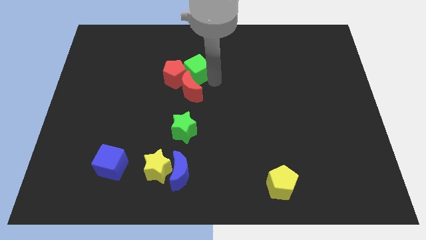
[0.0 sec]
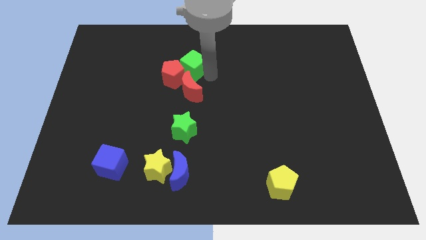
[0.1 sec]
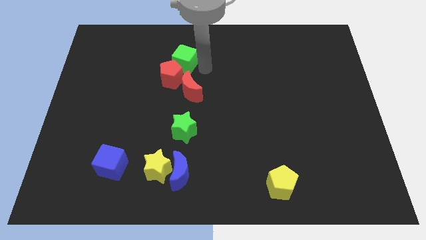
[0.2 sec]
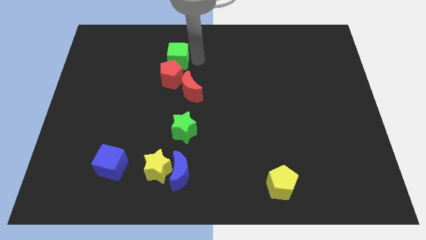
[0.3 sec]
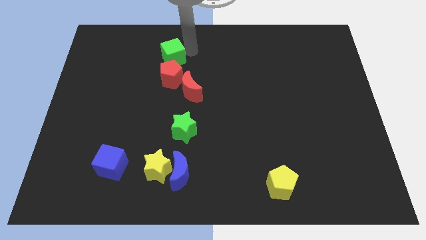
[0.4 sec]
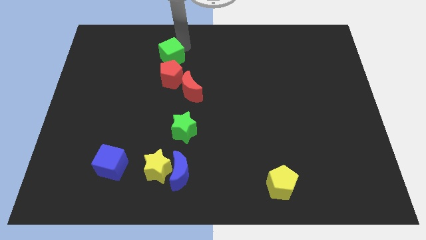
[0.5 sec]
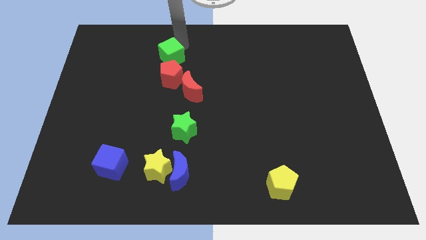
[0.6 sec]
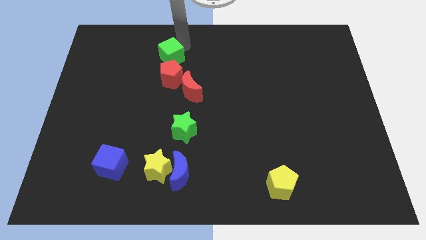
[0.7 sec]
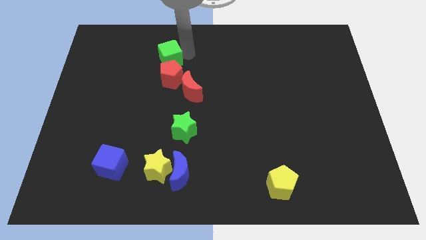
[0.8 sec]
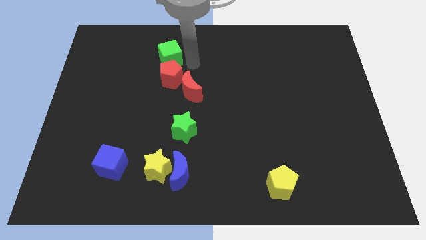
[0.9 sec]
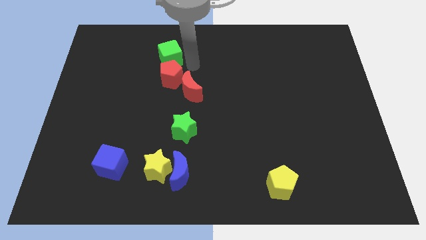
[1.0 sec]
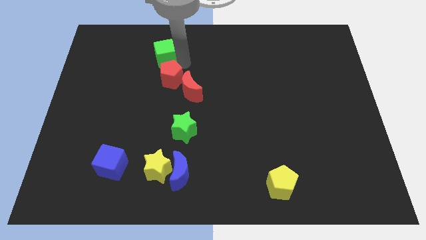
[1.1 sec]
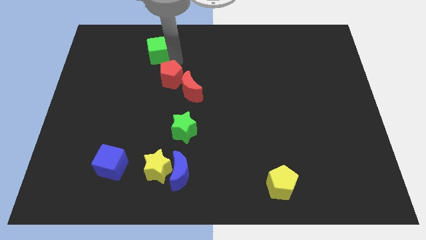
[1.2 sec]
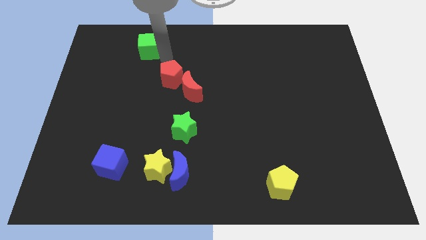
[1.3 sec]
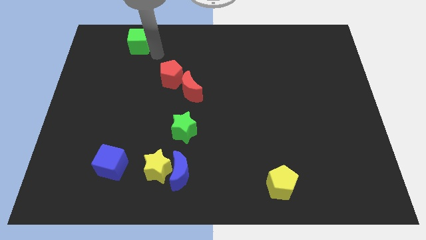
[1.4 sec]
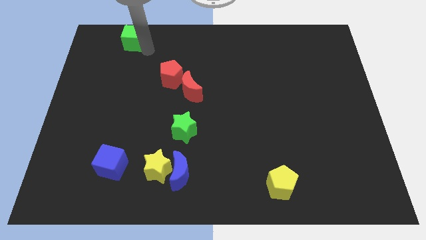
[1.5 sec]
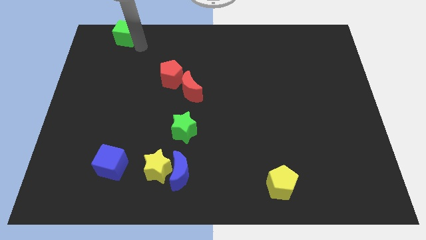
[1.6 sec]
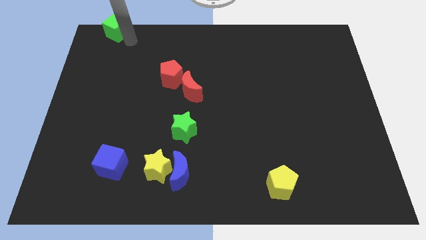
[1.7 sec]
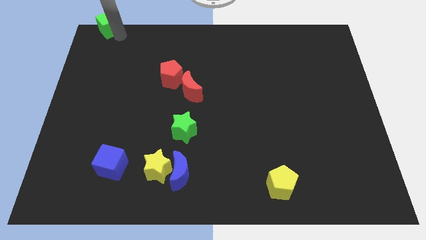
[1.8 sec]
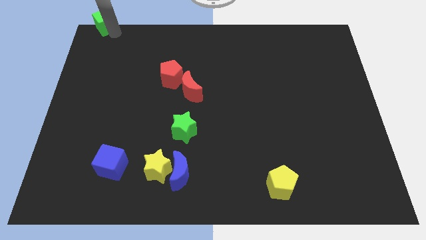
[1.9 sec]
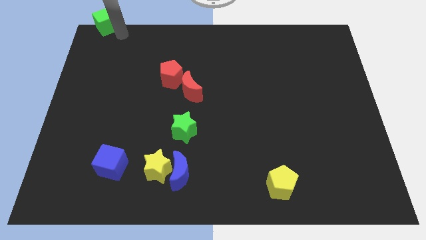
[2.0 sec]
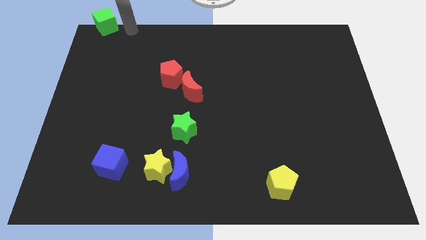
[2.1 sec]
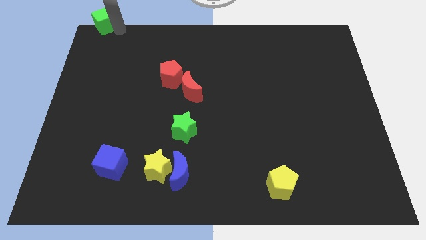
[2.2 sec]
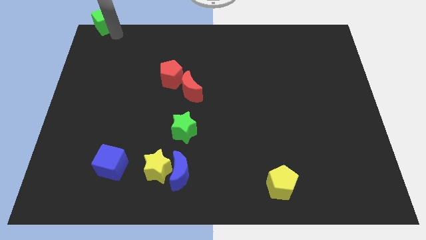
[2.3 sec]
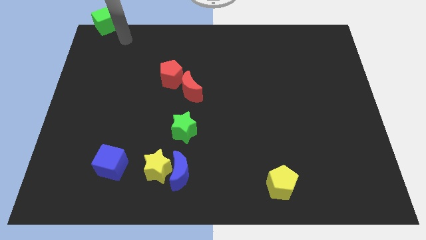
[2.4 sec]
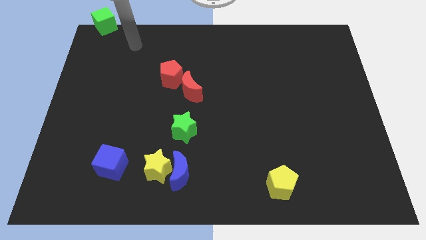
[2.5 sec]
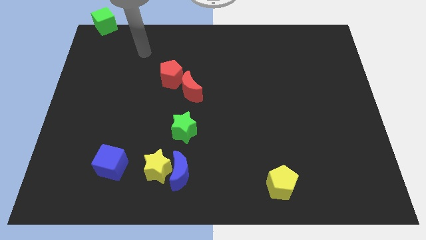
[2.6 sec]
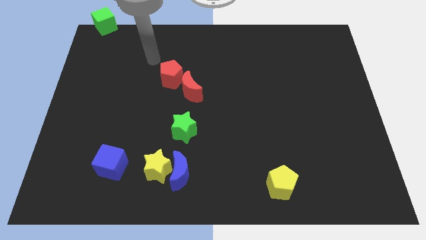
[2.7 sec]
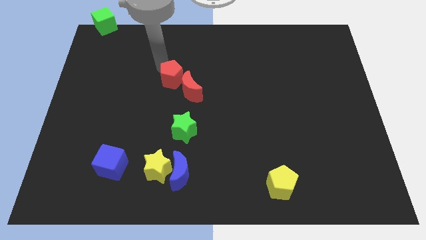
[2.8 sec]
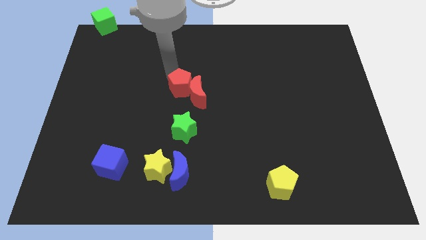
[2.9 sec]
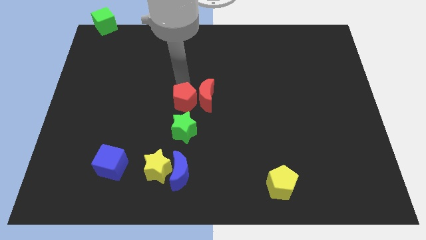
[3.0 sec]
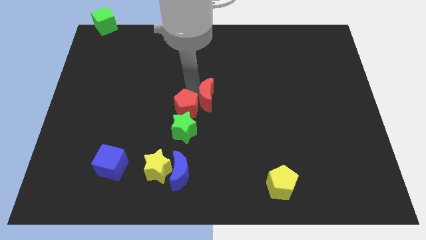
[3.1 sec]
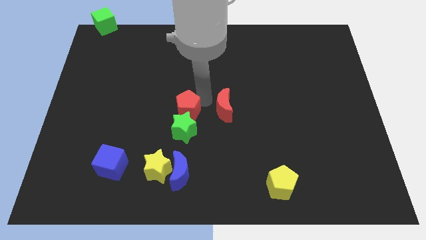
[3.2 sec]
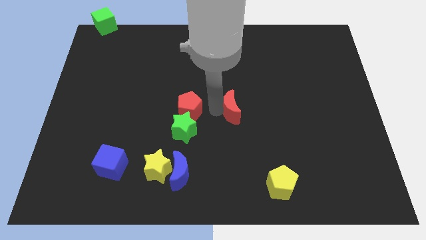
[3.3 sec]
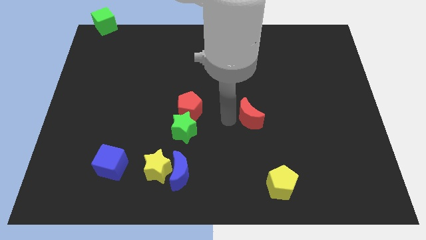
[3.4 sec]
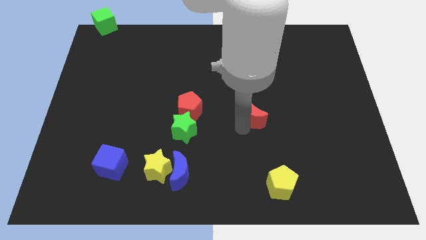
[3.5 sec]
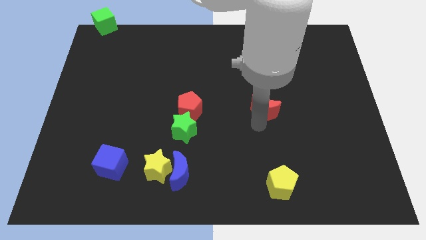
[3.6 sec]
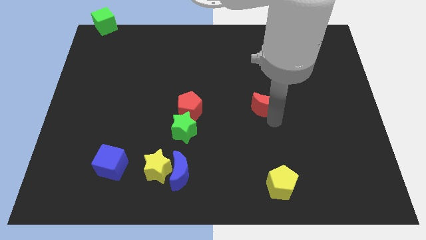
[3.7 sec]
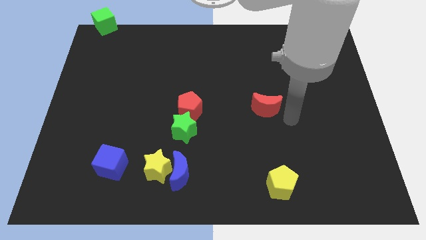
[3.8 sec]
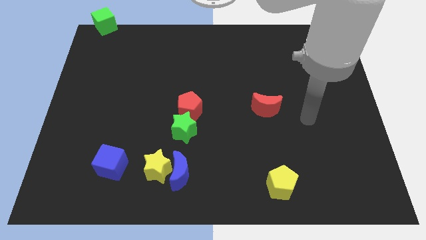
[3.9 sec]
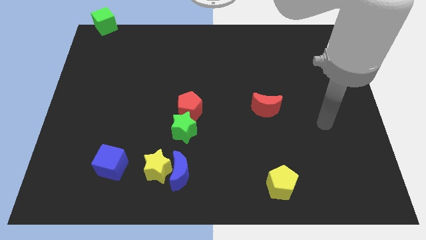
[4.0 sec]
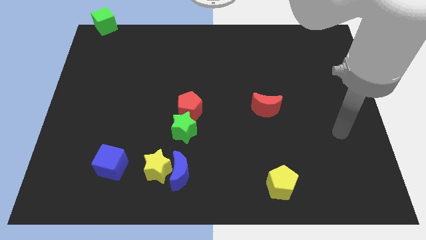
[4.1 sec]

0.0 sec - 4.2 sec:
push the green cube towards top left corner of the board

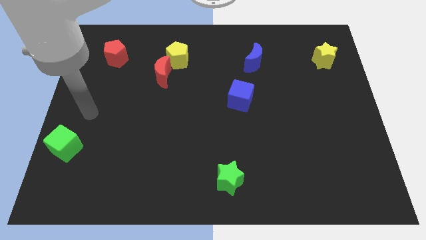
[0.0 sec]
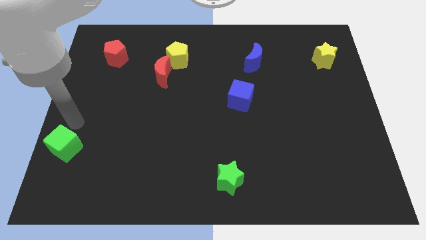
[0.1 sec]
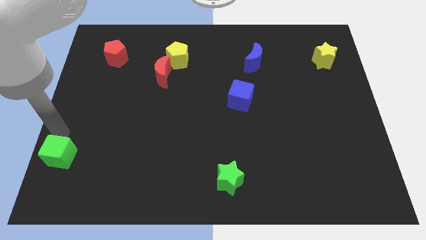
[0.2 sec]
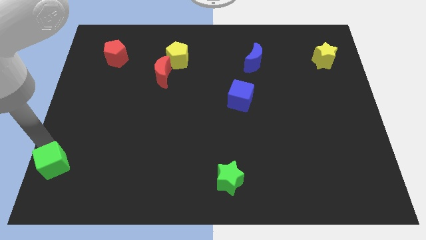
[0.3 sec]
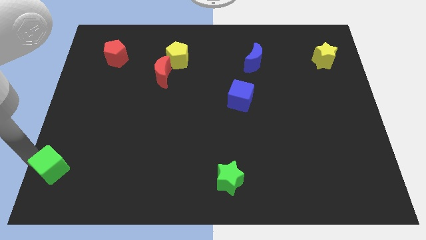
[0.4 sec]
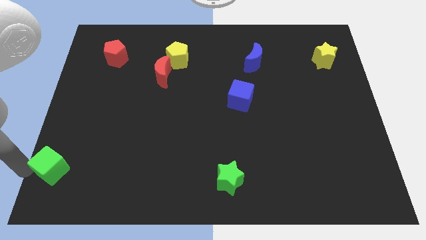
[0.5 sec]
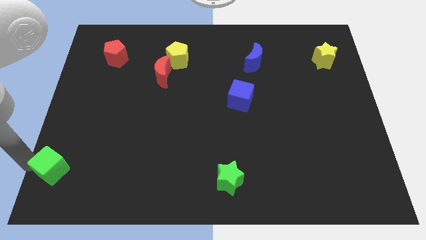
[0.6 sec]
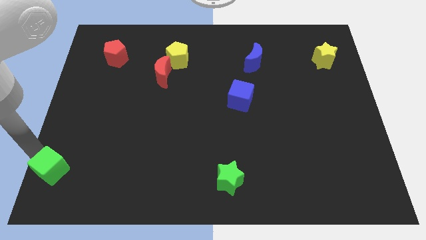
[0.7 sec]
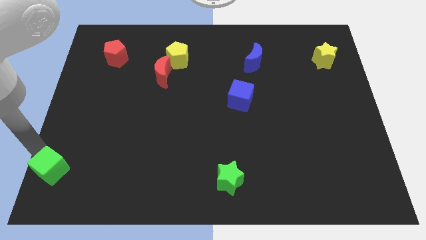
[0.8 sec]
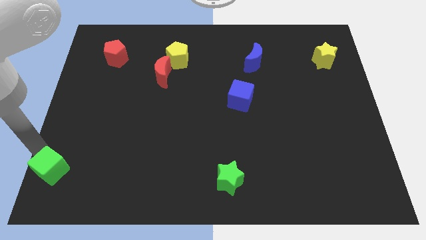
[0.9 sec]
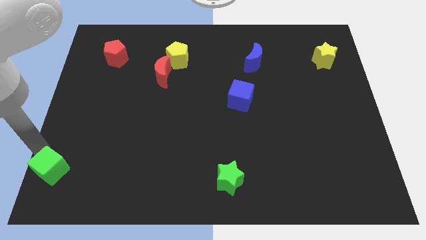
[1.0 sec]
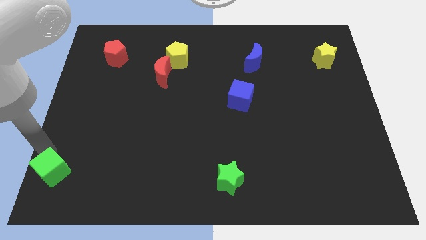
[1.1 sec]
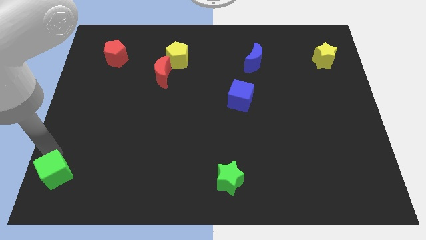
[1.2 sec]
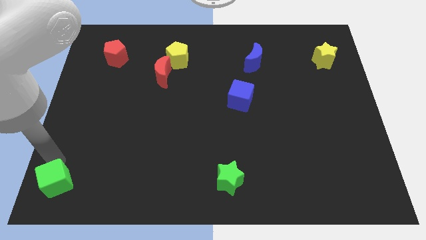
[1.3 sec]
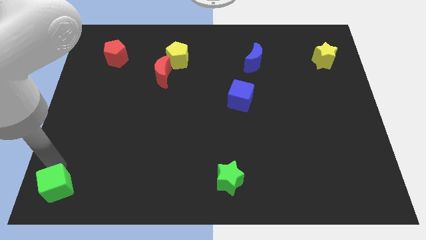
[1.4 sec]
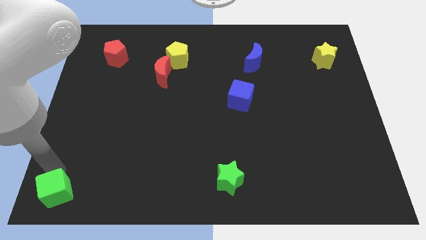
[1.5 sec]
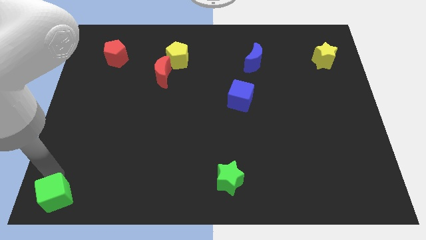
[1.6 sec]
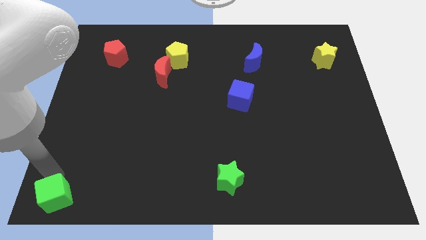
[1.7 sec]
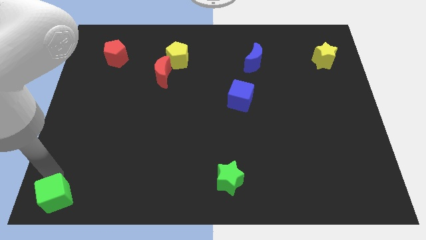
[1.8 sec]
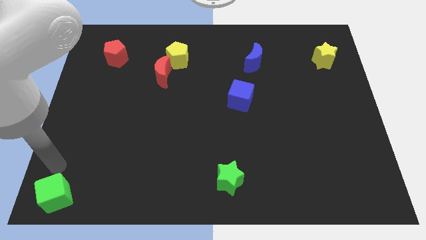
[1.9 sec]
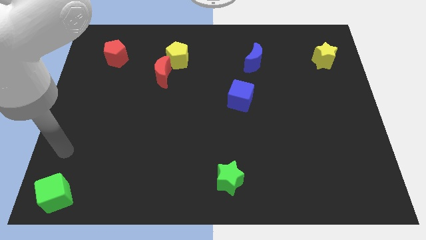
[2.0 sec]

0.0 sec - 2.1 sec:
push the green cube towards the left bottom end

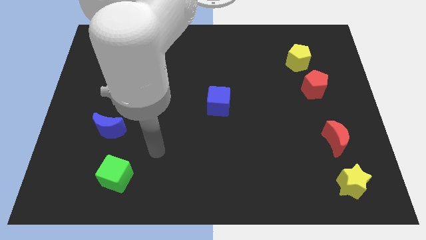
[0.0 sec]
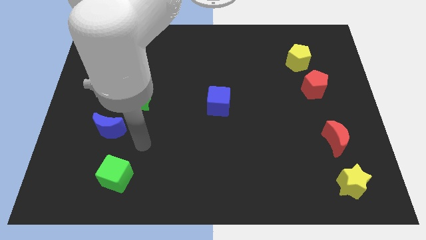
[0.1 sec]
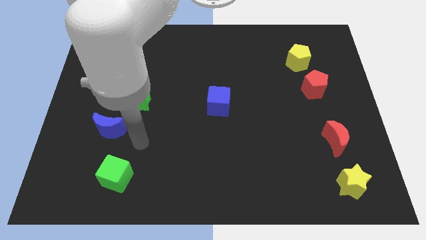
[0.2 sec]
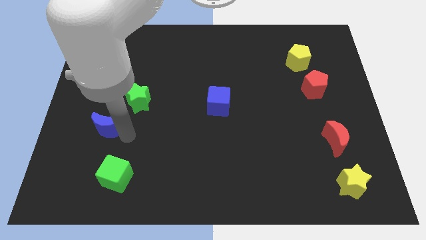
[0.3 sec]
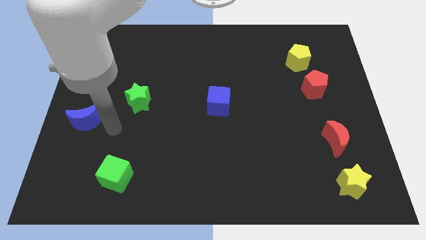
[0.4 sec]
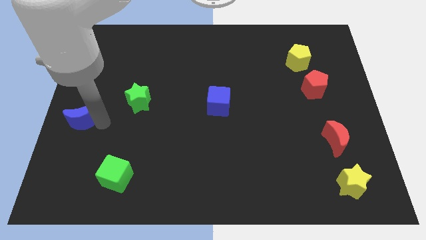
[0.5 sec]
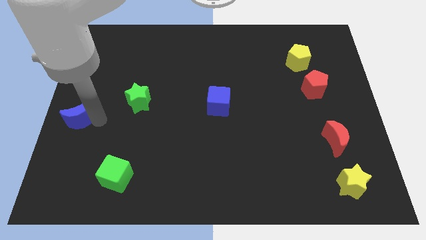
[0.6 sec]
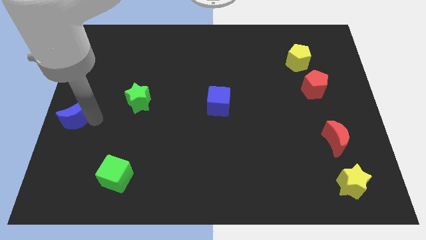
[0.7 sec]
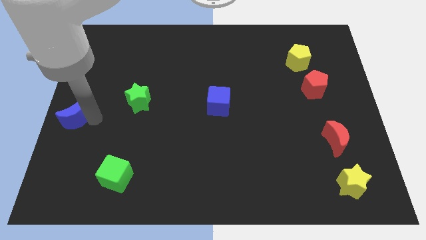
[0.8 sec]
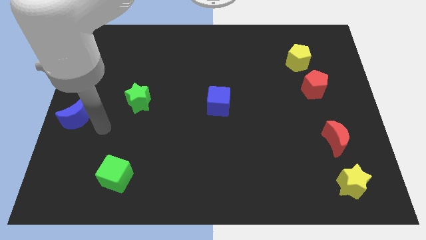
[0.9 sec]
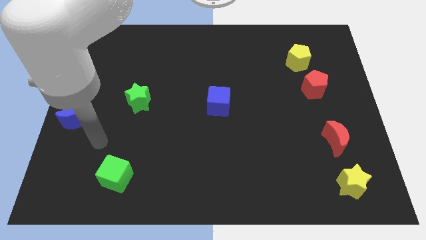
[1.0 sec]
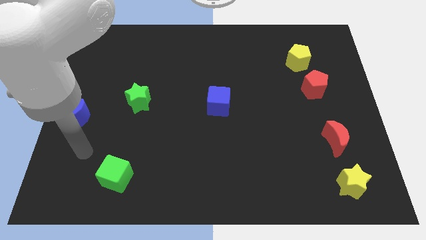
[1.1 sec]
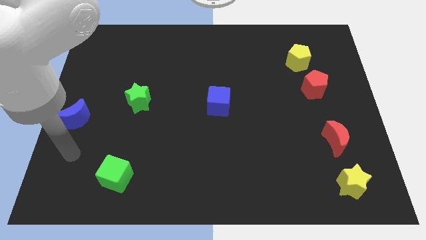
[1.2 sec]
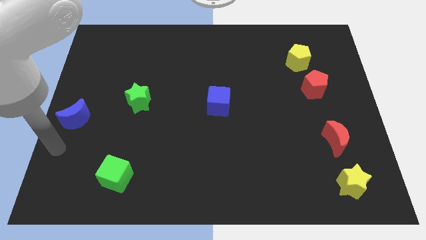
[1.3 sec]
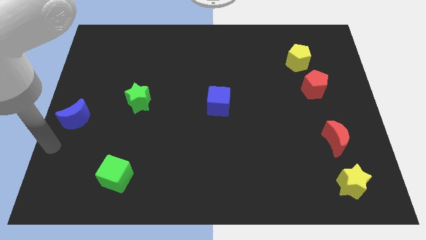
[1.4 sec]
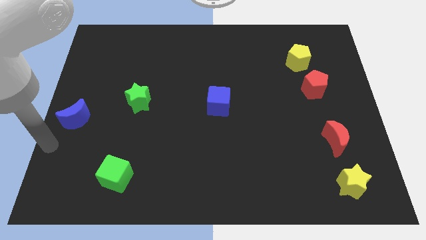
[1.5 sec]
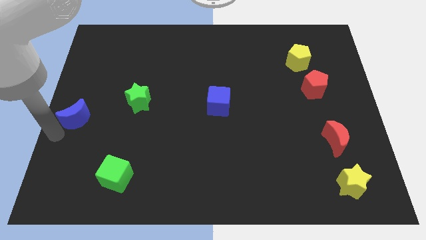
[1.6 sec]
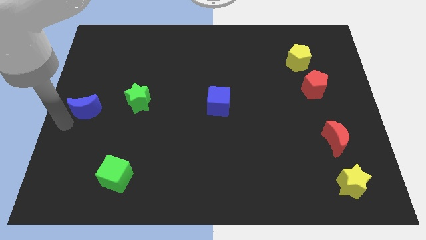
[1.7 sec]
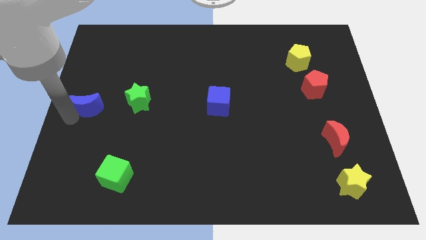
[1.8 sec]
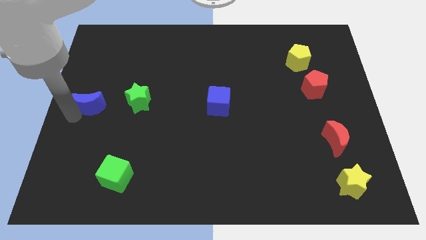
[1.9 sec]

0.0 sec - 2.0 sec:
move the blue crescent towards the center left side

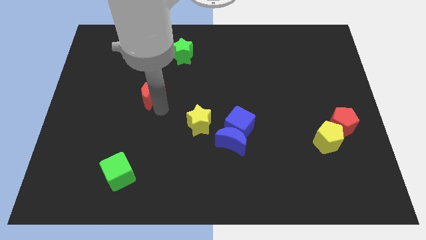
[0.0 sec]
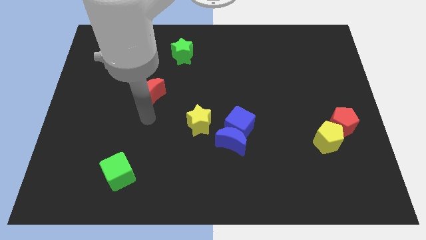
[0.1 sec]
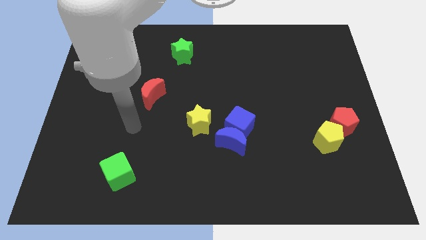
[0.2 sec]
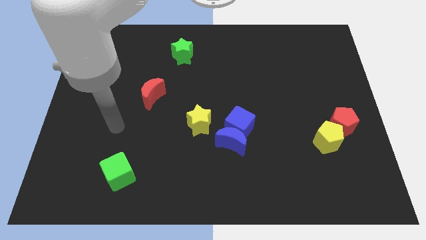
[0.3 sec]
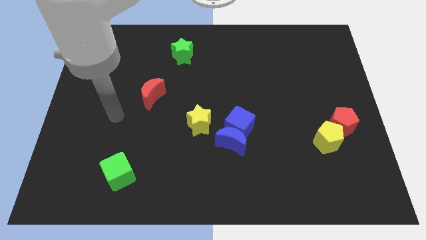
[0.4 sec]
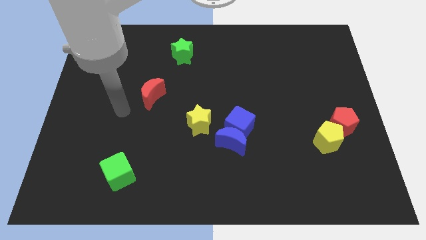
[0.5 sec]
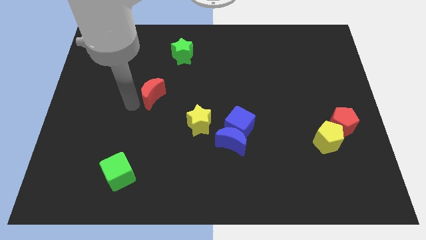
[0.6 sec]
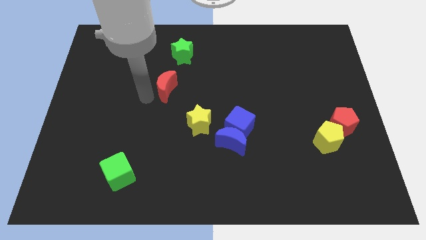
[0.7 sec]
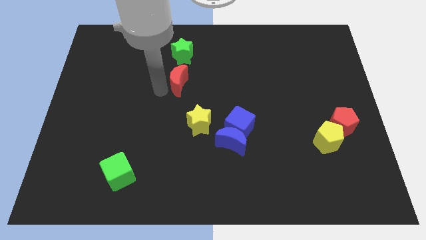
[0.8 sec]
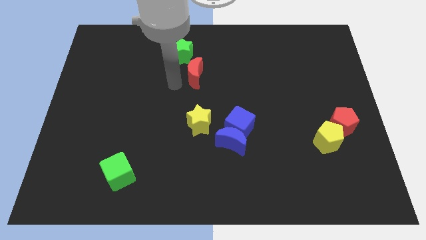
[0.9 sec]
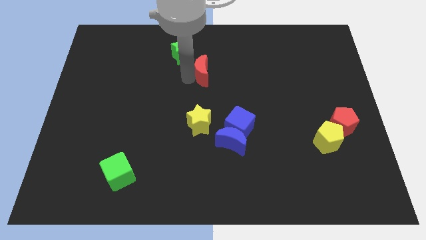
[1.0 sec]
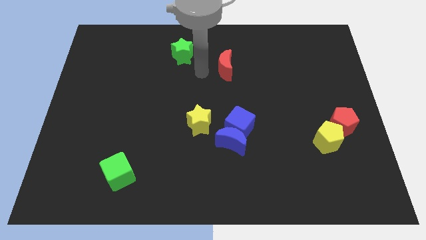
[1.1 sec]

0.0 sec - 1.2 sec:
push the red crescent to the top of the yellow star
